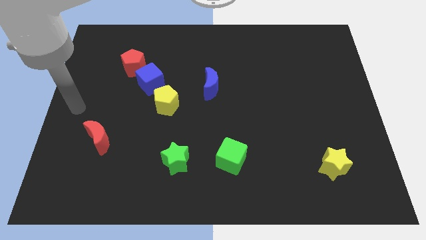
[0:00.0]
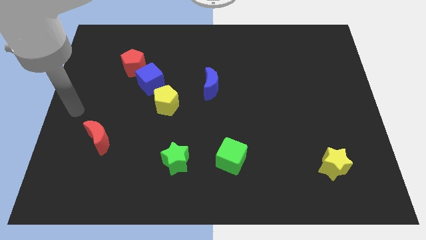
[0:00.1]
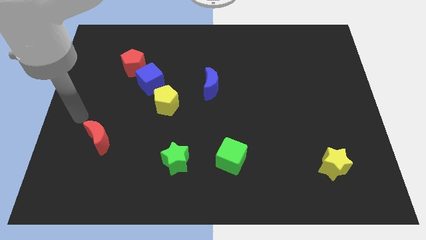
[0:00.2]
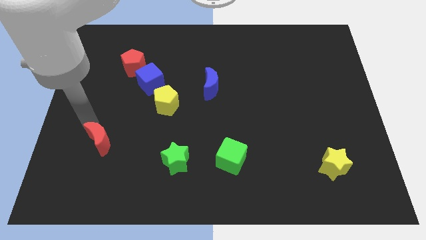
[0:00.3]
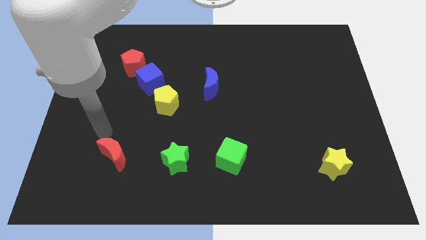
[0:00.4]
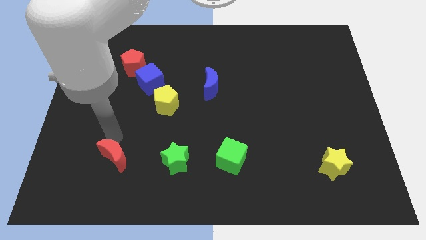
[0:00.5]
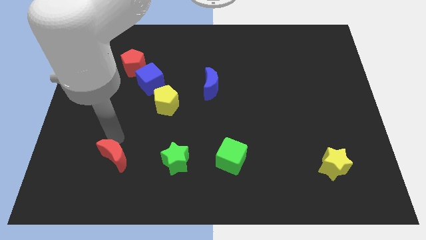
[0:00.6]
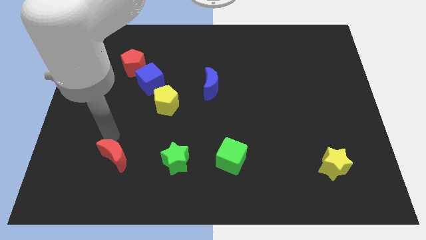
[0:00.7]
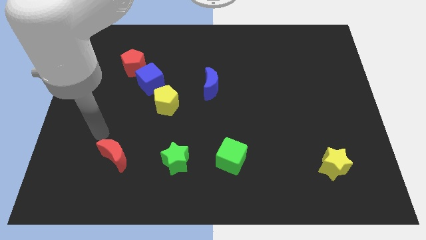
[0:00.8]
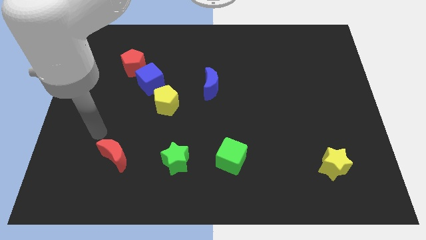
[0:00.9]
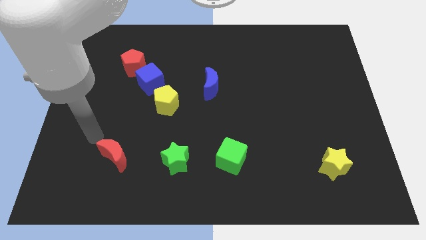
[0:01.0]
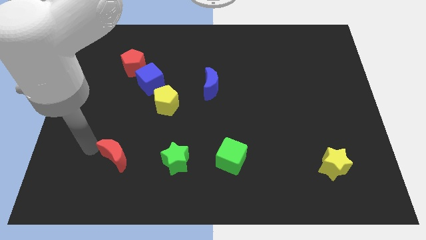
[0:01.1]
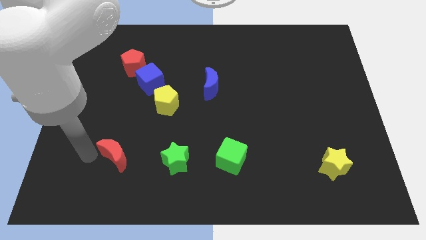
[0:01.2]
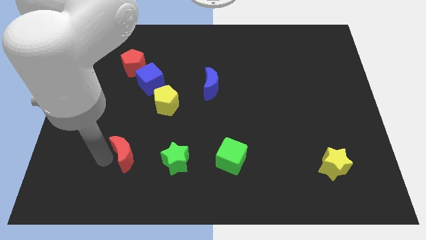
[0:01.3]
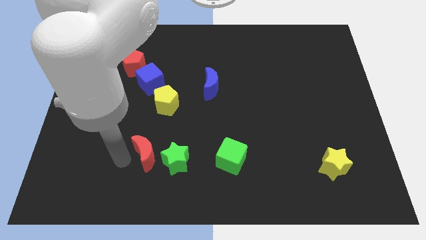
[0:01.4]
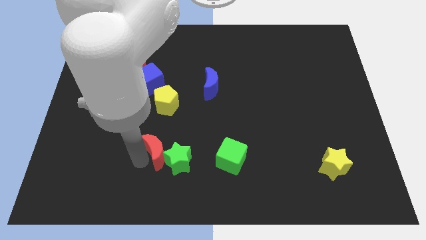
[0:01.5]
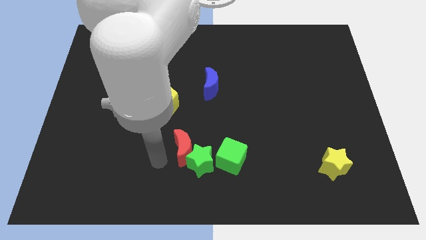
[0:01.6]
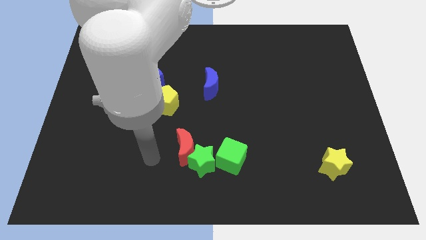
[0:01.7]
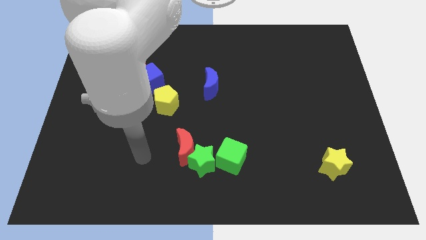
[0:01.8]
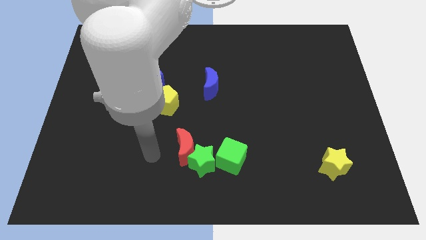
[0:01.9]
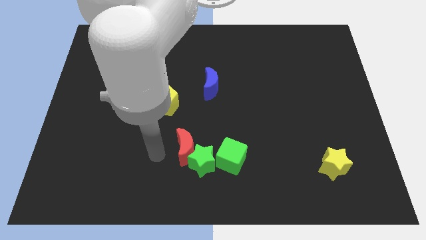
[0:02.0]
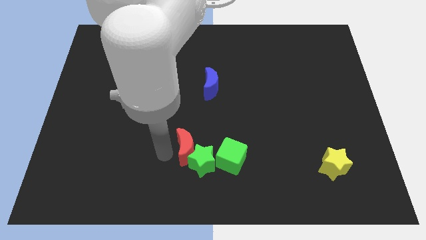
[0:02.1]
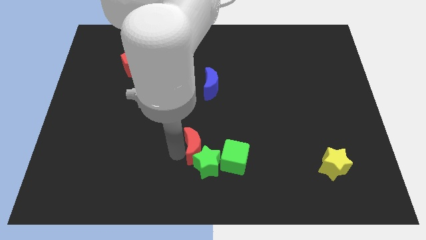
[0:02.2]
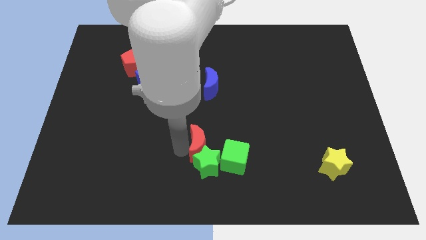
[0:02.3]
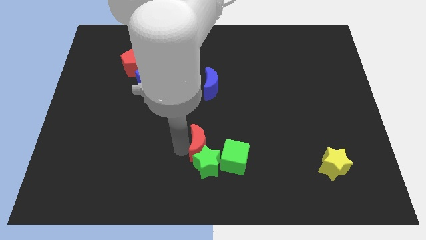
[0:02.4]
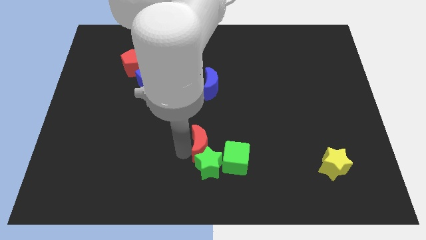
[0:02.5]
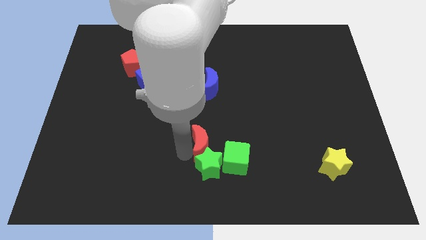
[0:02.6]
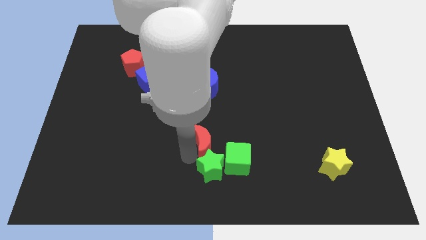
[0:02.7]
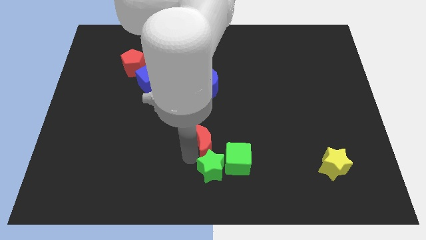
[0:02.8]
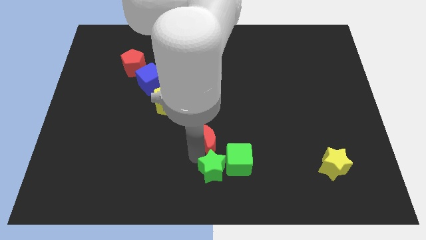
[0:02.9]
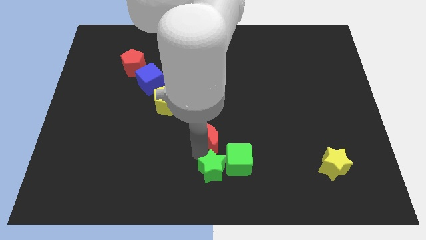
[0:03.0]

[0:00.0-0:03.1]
push red crescent in to the green star

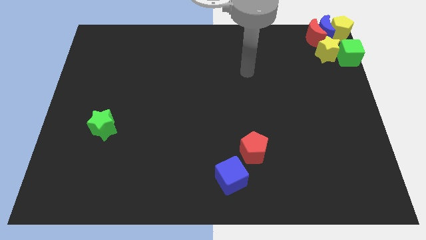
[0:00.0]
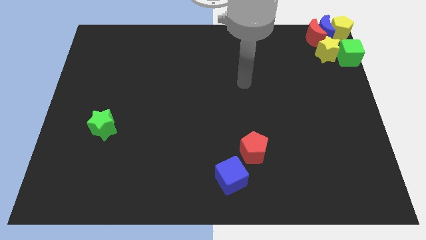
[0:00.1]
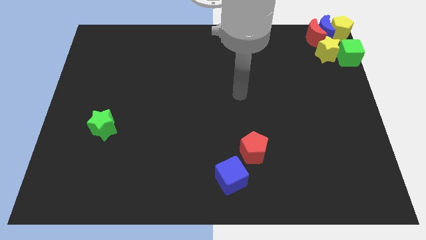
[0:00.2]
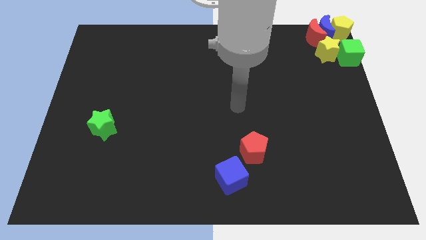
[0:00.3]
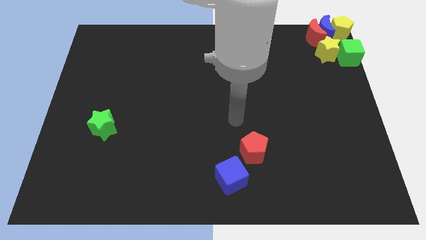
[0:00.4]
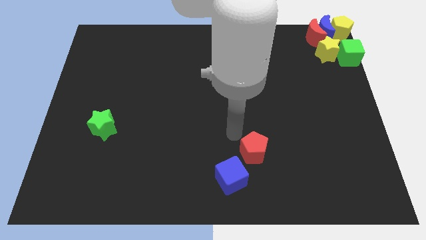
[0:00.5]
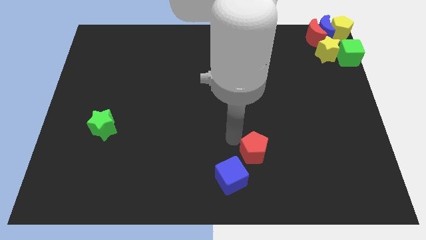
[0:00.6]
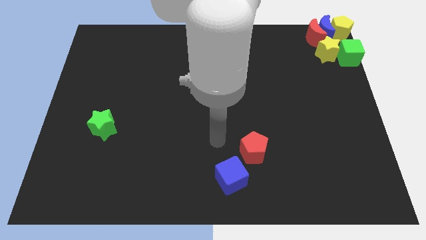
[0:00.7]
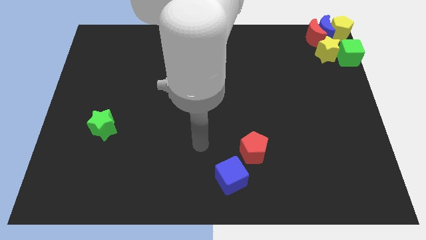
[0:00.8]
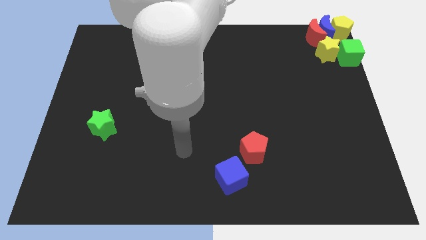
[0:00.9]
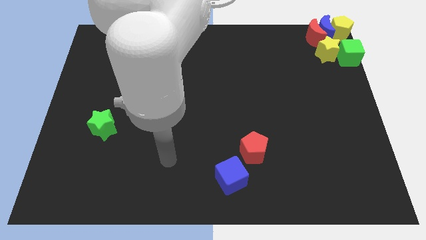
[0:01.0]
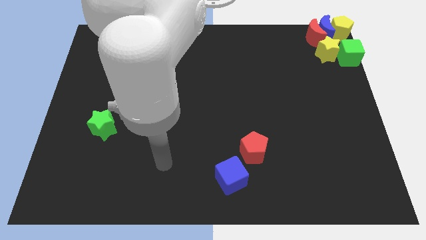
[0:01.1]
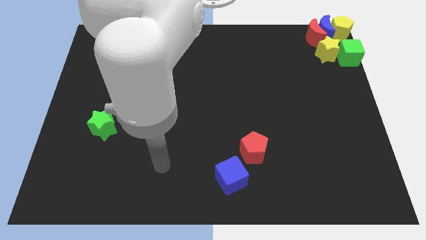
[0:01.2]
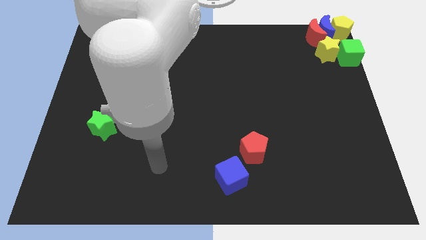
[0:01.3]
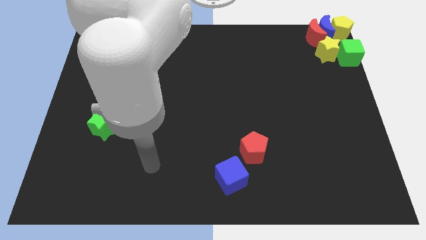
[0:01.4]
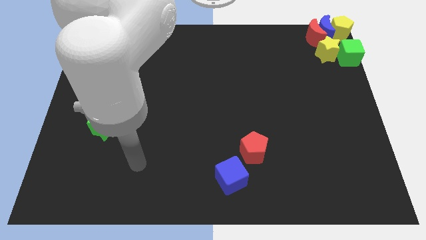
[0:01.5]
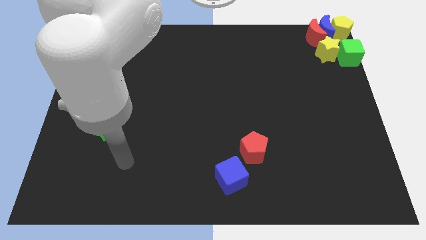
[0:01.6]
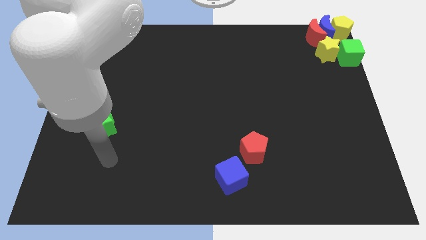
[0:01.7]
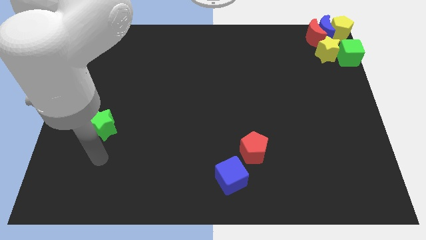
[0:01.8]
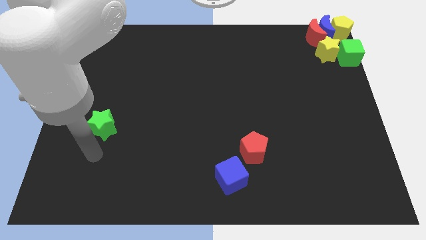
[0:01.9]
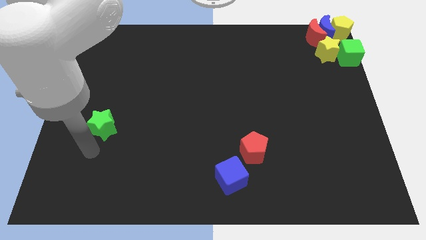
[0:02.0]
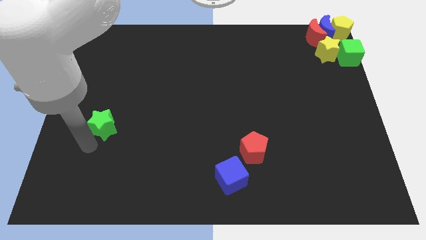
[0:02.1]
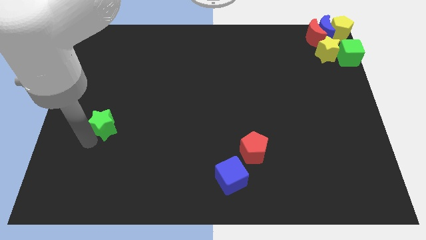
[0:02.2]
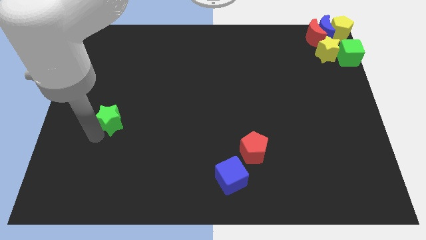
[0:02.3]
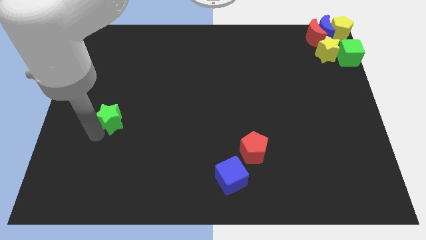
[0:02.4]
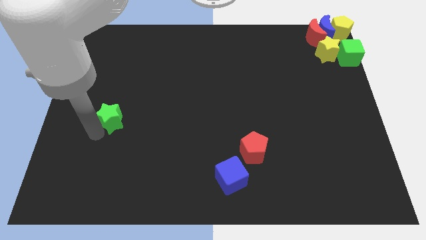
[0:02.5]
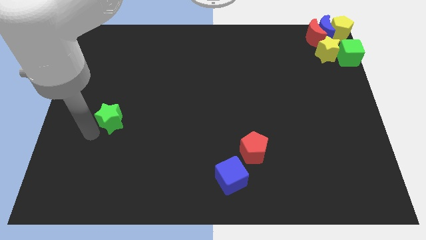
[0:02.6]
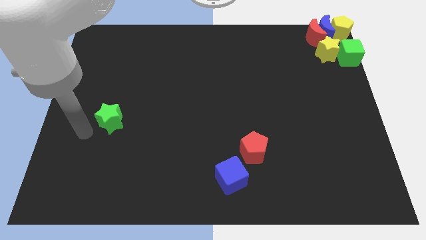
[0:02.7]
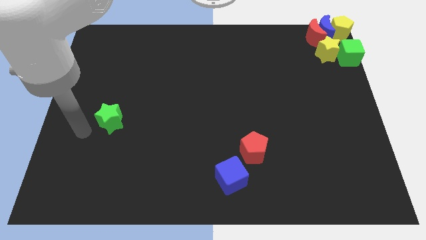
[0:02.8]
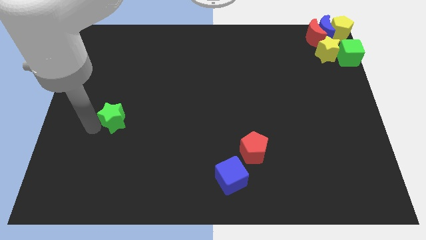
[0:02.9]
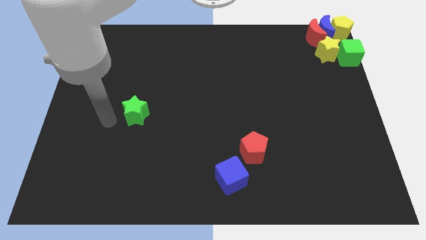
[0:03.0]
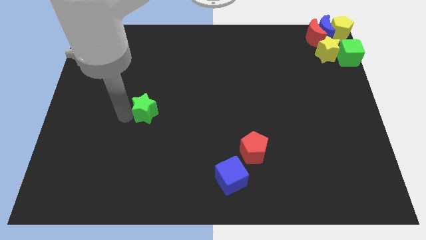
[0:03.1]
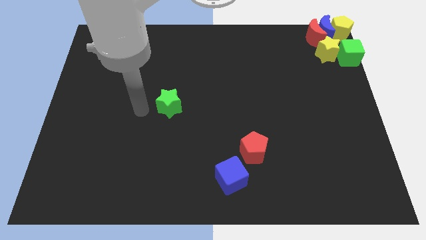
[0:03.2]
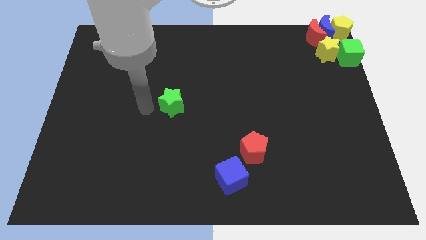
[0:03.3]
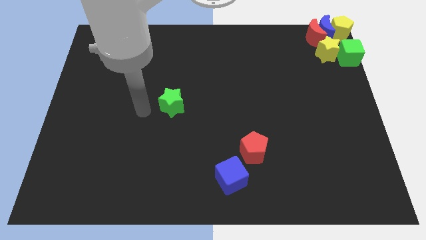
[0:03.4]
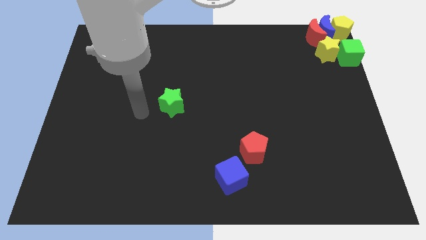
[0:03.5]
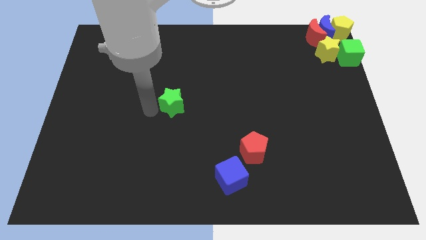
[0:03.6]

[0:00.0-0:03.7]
place the green star to the center of the board

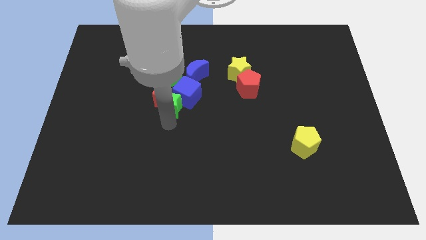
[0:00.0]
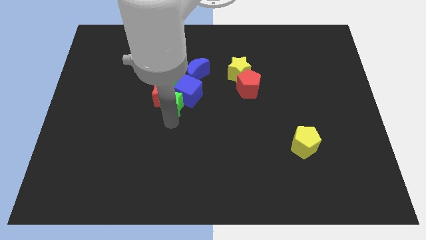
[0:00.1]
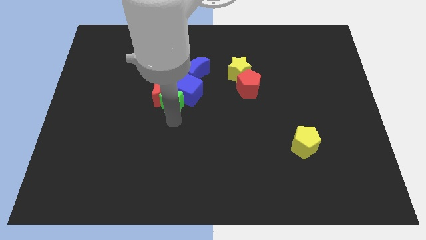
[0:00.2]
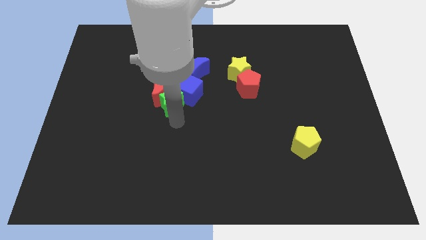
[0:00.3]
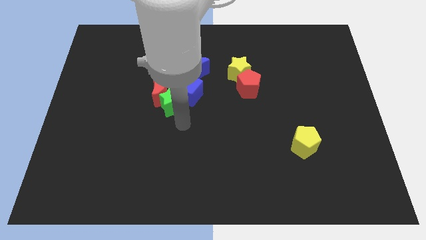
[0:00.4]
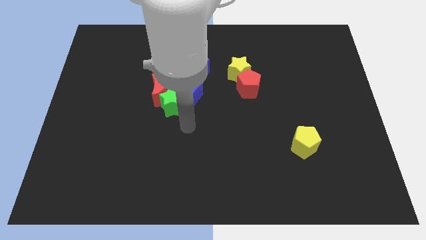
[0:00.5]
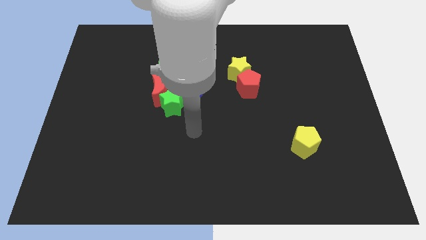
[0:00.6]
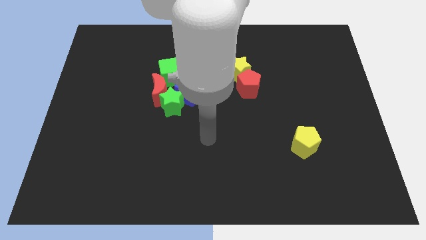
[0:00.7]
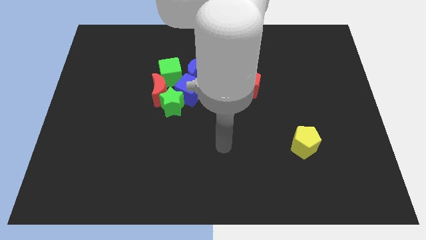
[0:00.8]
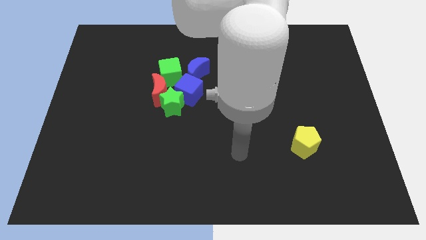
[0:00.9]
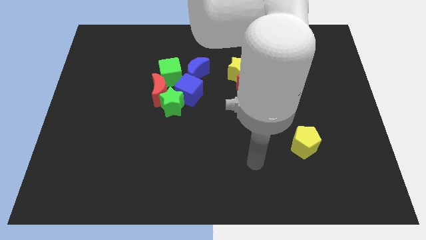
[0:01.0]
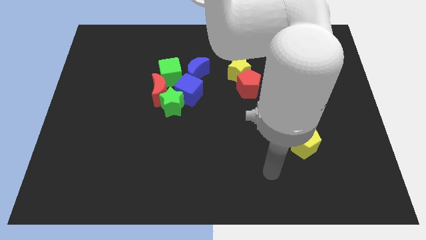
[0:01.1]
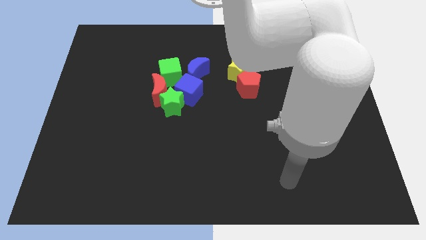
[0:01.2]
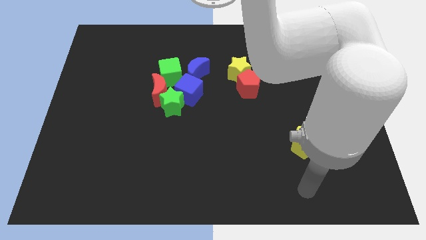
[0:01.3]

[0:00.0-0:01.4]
move yourself away from the green star

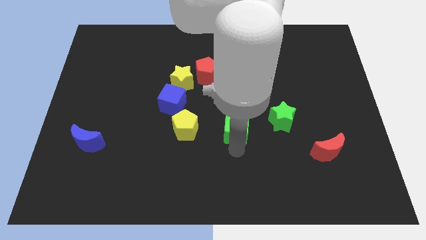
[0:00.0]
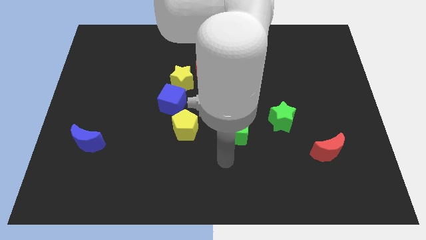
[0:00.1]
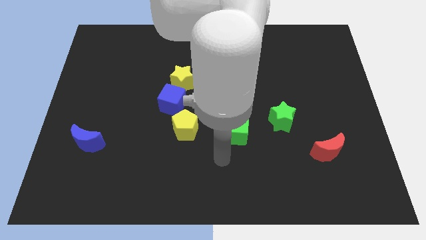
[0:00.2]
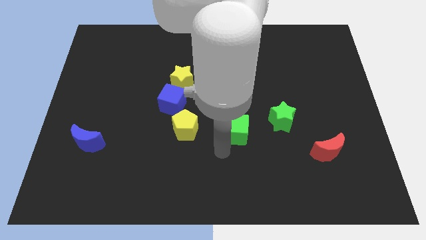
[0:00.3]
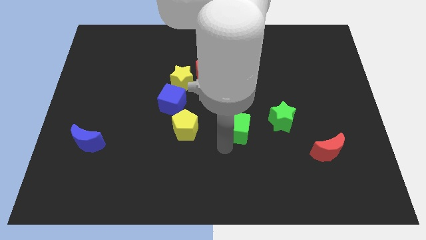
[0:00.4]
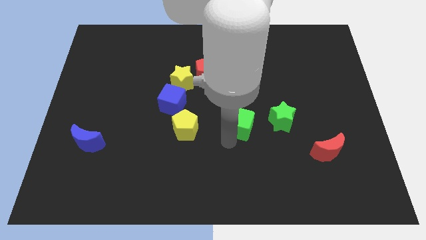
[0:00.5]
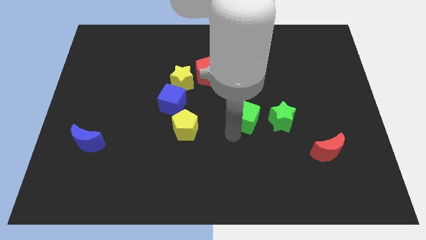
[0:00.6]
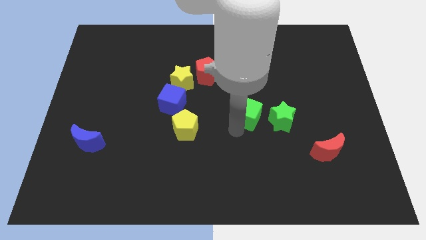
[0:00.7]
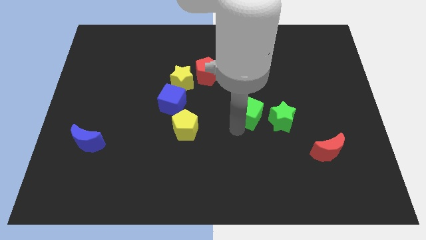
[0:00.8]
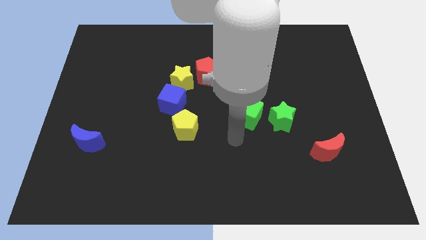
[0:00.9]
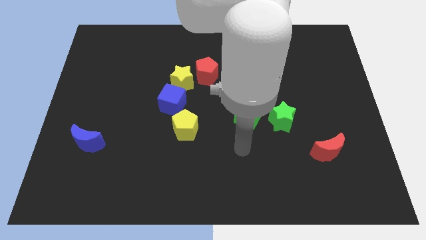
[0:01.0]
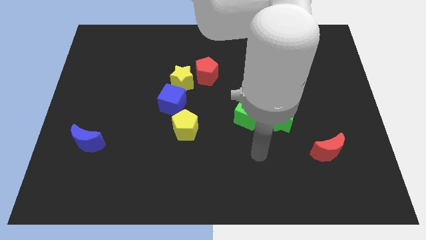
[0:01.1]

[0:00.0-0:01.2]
move the green cube close to the green star
